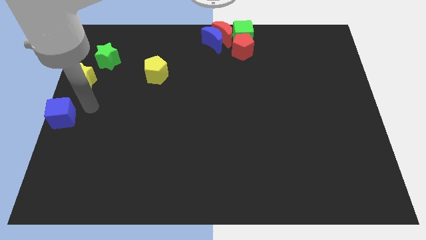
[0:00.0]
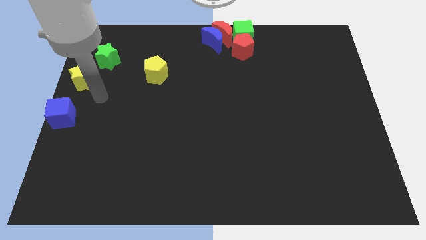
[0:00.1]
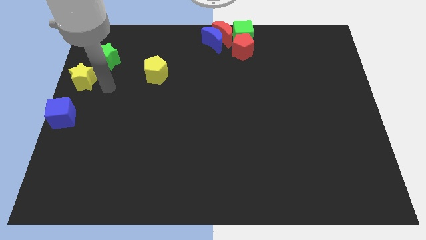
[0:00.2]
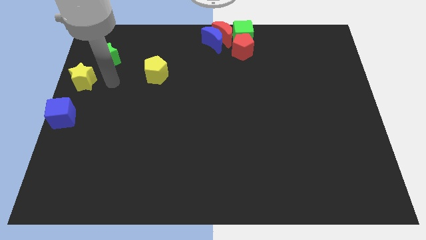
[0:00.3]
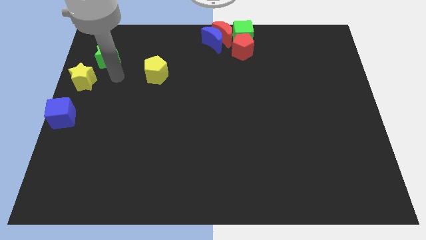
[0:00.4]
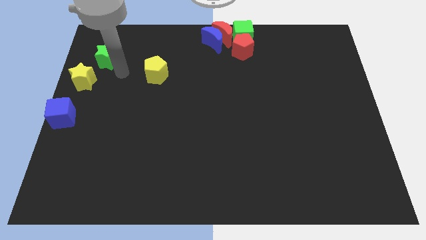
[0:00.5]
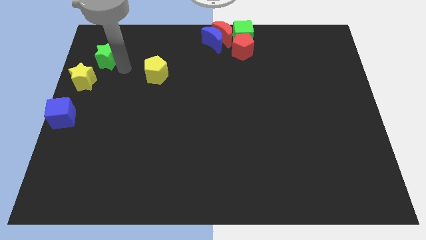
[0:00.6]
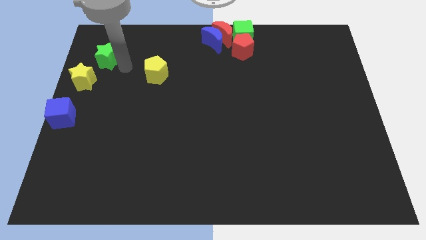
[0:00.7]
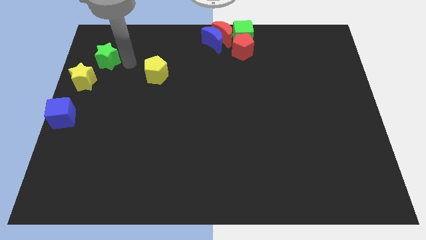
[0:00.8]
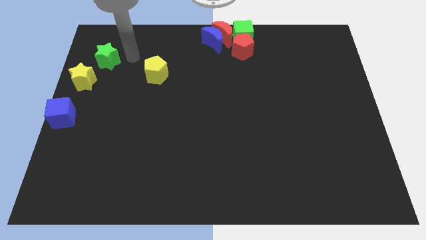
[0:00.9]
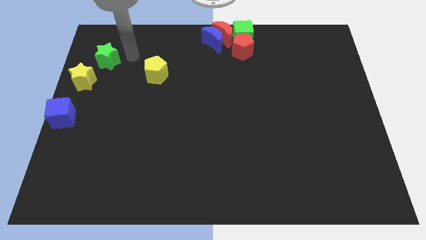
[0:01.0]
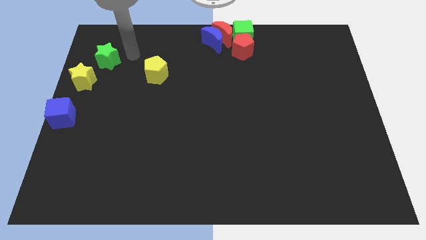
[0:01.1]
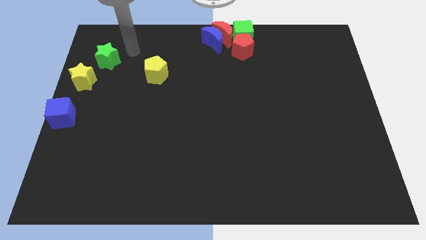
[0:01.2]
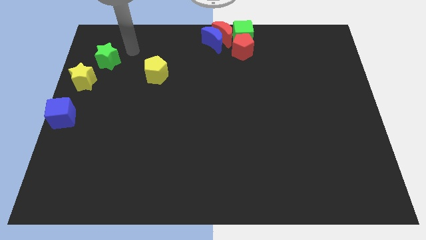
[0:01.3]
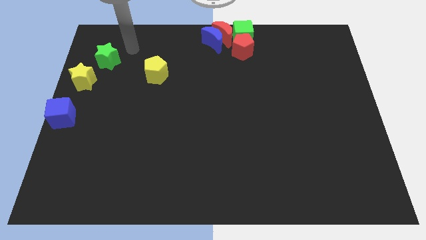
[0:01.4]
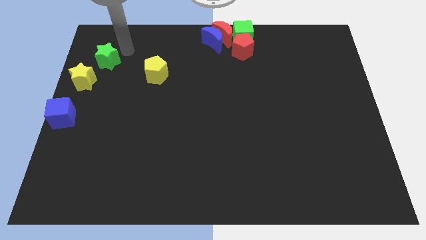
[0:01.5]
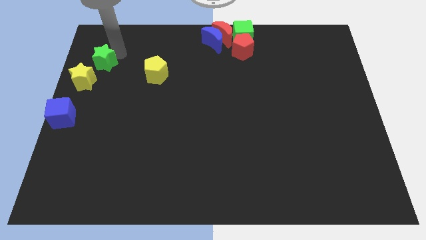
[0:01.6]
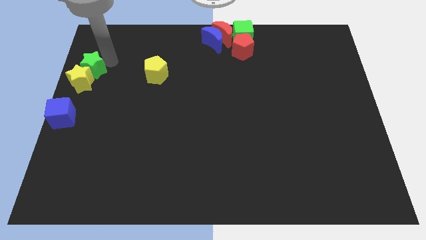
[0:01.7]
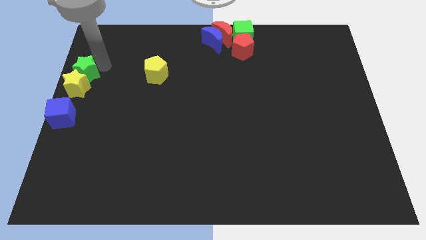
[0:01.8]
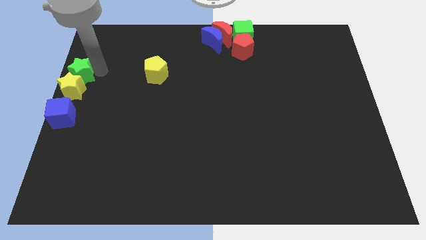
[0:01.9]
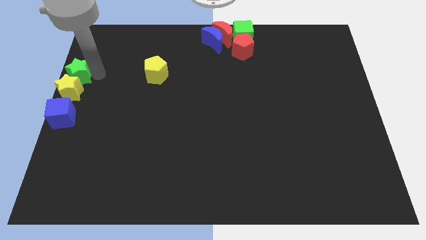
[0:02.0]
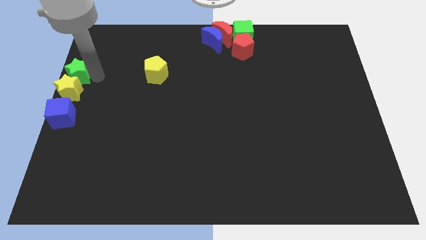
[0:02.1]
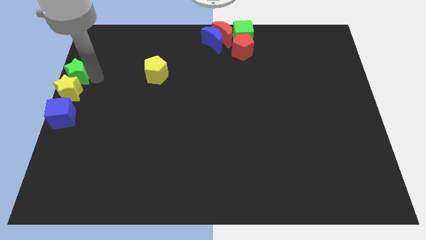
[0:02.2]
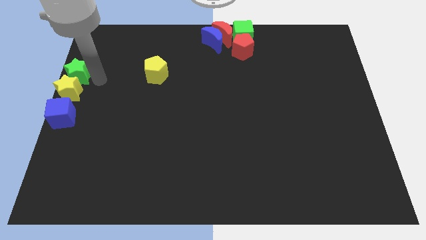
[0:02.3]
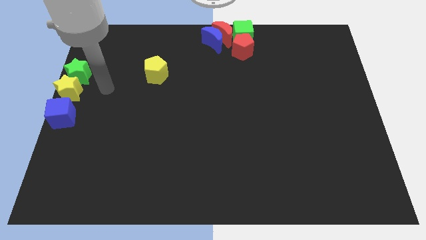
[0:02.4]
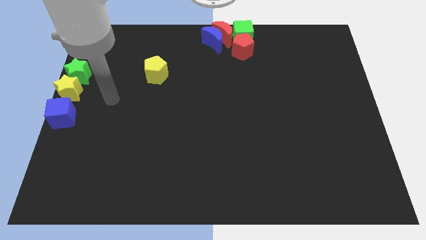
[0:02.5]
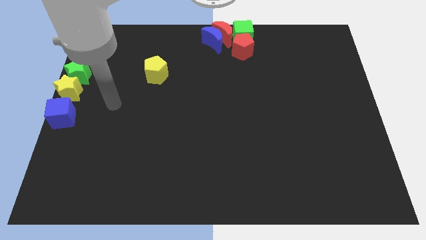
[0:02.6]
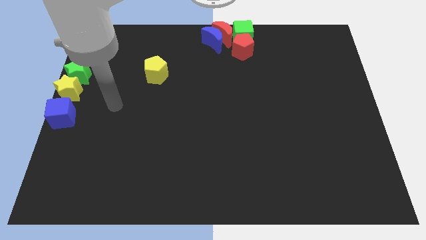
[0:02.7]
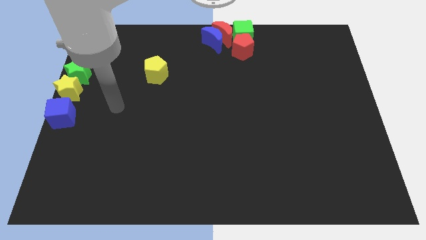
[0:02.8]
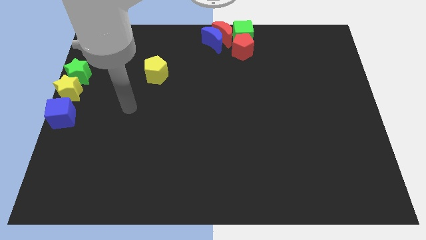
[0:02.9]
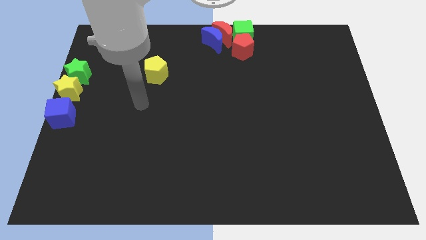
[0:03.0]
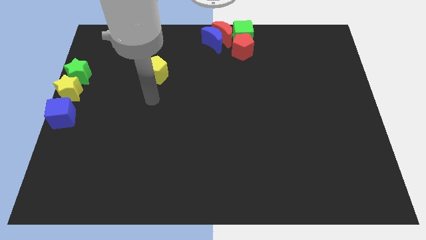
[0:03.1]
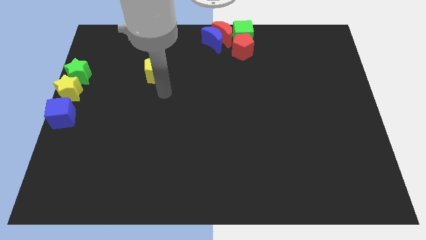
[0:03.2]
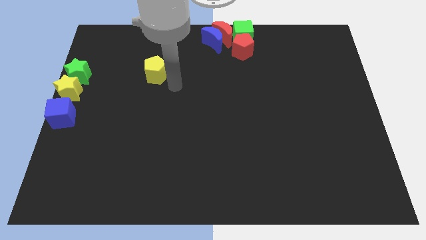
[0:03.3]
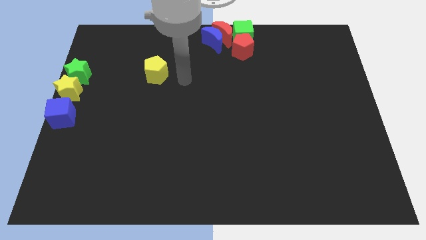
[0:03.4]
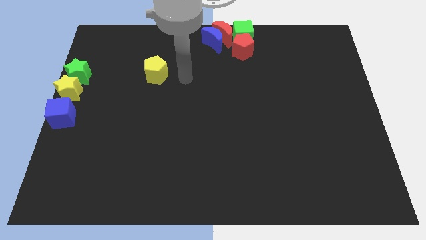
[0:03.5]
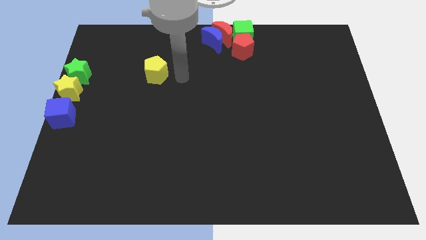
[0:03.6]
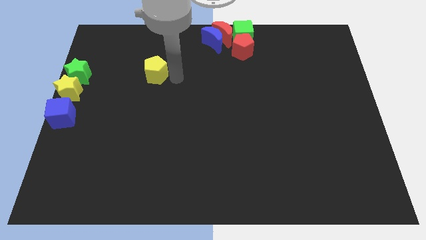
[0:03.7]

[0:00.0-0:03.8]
push the yellow star and green star above the blue crescent

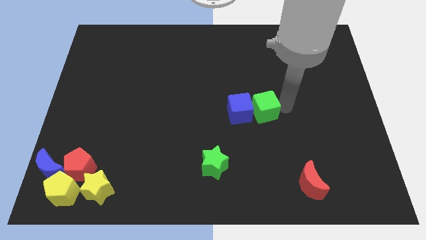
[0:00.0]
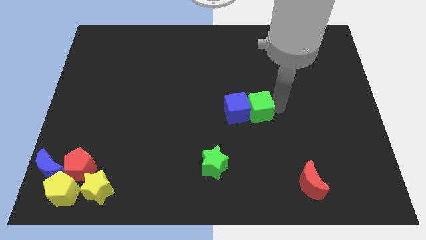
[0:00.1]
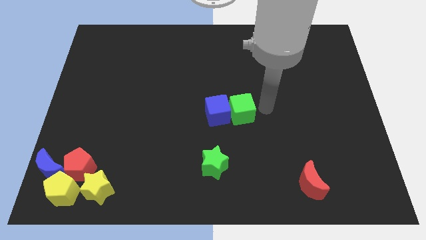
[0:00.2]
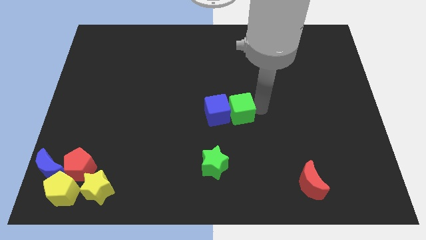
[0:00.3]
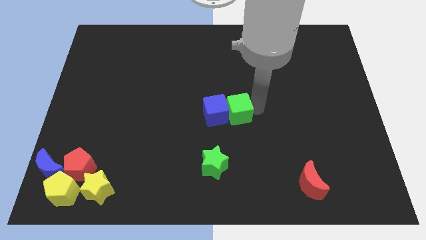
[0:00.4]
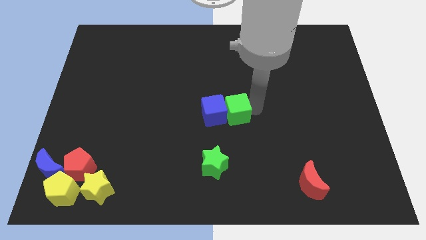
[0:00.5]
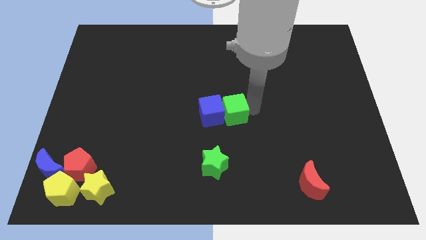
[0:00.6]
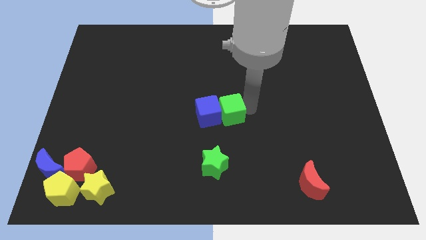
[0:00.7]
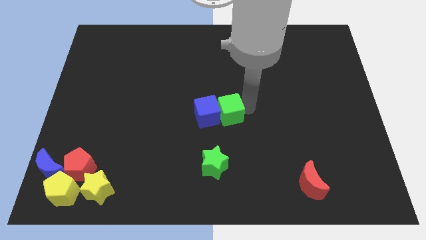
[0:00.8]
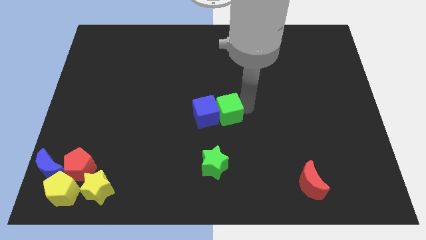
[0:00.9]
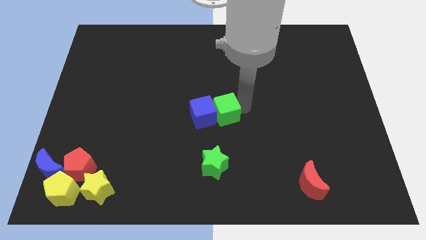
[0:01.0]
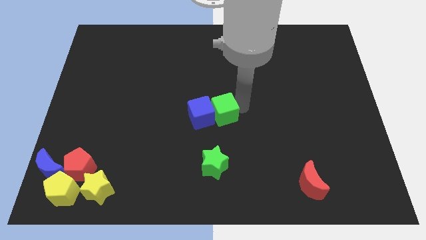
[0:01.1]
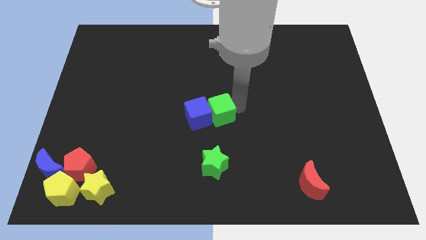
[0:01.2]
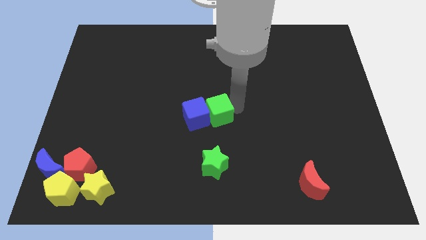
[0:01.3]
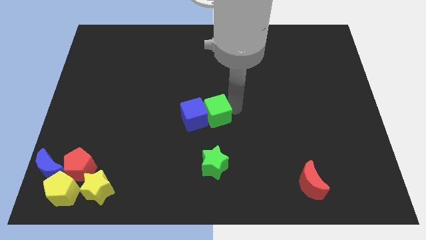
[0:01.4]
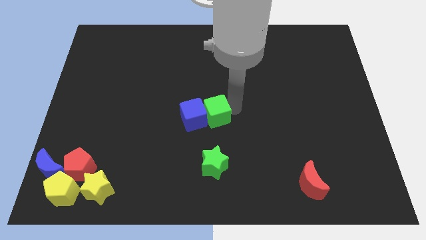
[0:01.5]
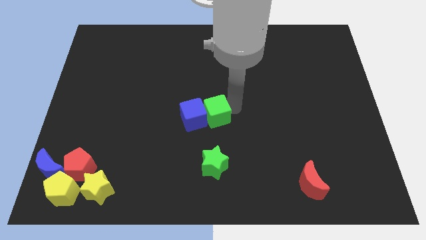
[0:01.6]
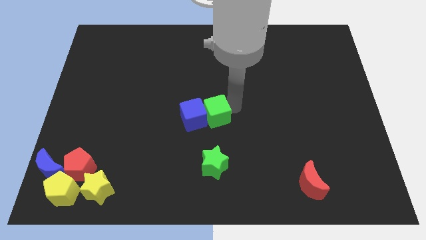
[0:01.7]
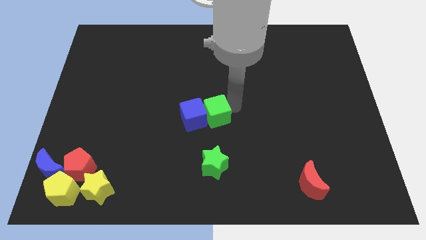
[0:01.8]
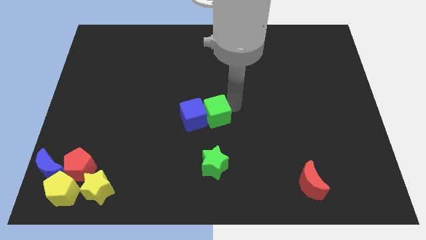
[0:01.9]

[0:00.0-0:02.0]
place the green cube at the top of the green star

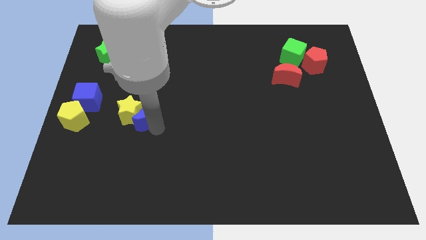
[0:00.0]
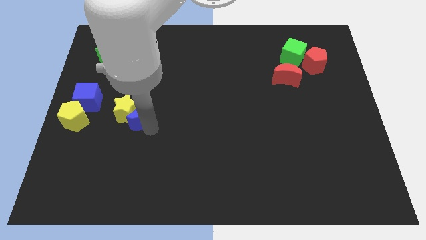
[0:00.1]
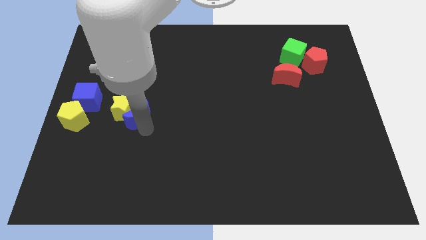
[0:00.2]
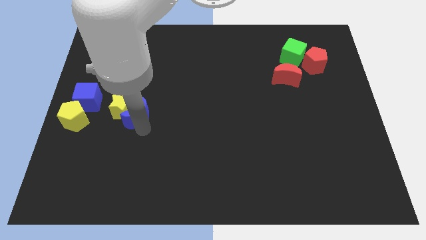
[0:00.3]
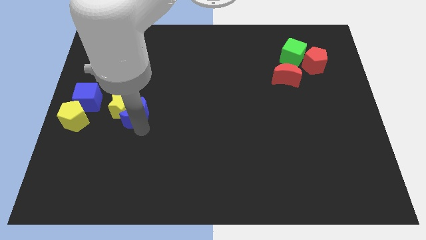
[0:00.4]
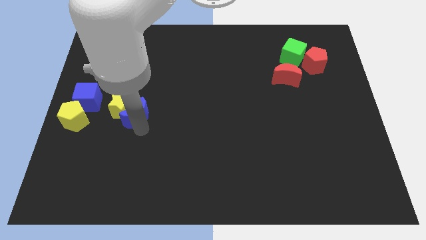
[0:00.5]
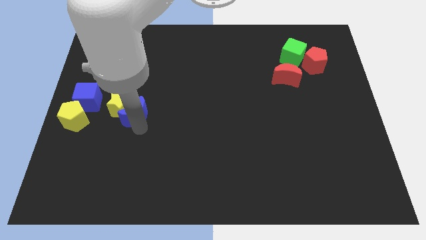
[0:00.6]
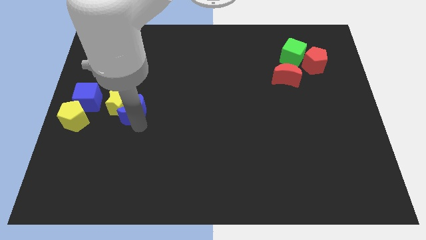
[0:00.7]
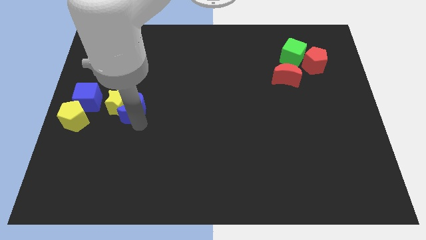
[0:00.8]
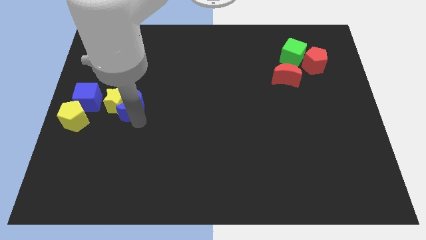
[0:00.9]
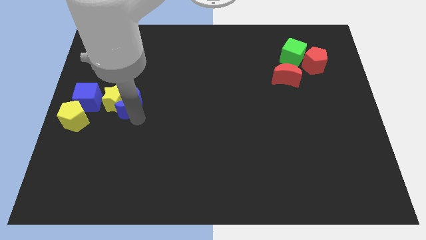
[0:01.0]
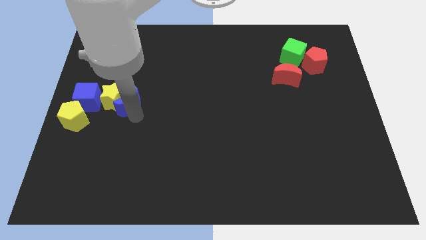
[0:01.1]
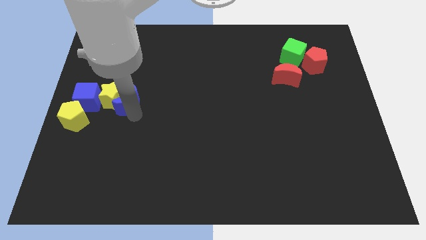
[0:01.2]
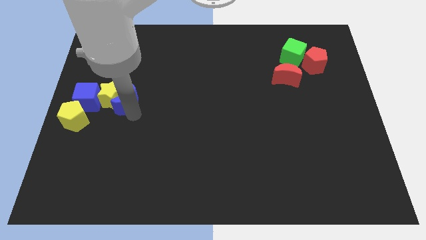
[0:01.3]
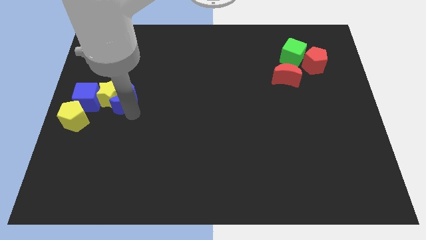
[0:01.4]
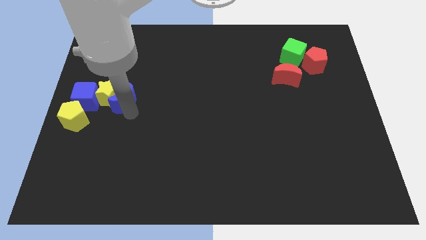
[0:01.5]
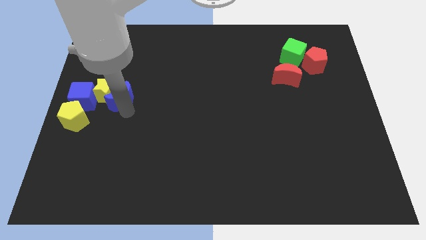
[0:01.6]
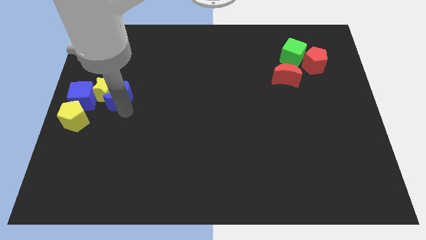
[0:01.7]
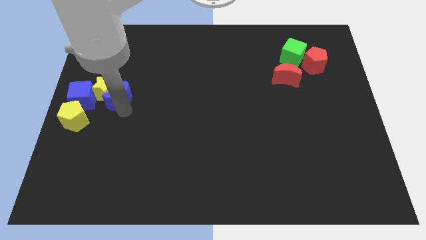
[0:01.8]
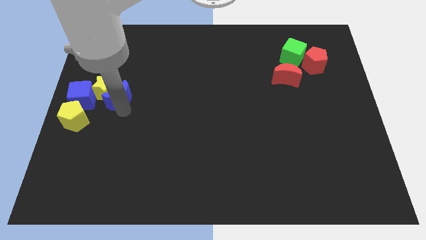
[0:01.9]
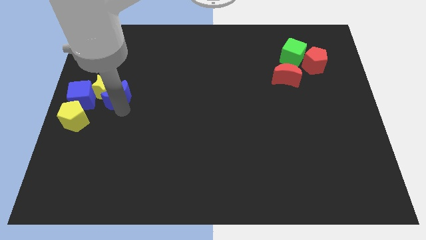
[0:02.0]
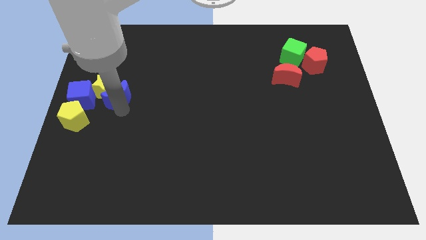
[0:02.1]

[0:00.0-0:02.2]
push the blue moon along with the yellow star into the blue cube

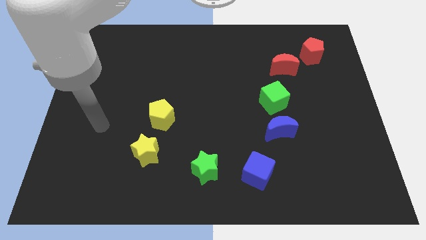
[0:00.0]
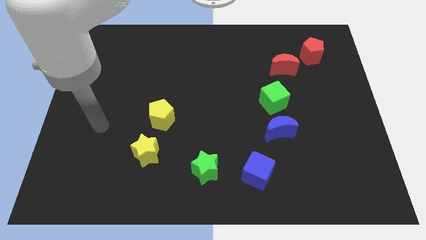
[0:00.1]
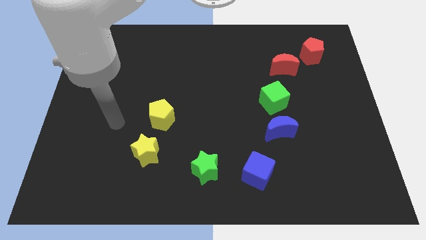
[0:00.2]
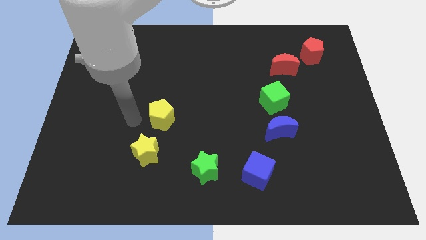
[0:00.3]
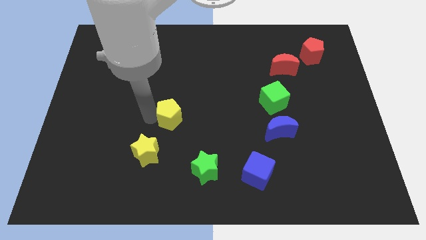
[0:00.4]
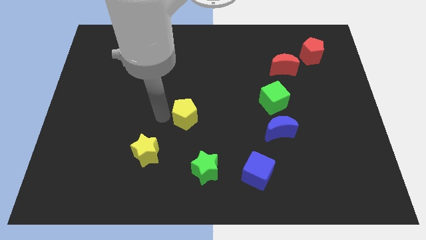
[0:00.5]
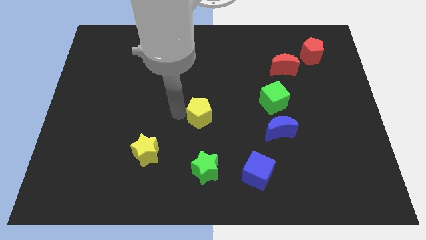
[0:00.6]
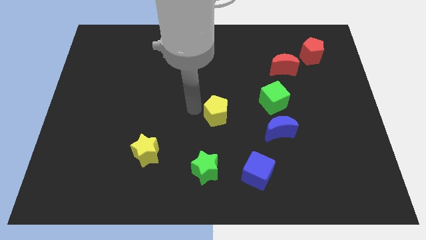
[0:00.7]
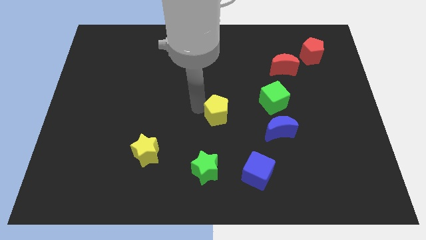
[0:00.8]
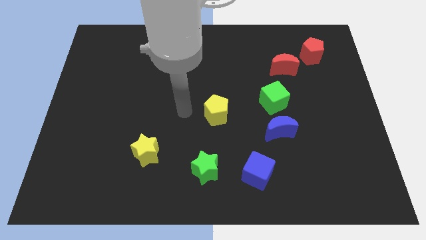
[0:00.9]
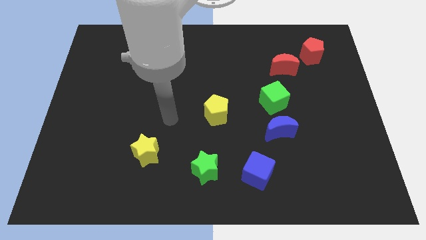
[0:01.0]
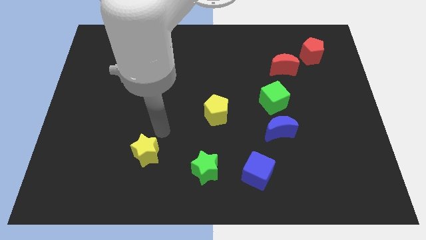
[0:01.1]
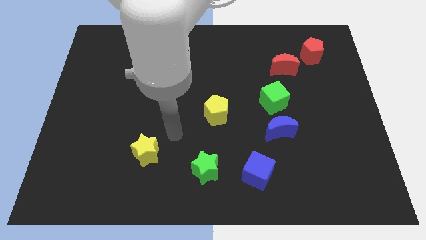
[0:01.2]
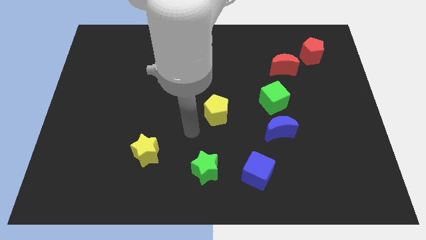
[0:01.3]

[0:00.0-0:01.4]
push the yellow pentagon
